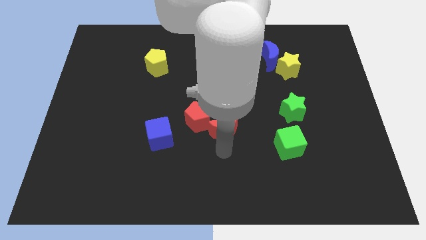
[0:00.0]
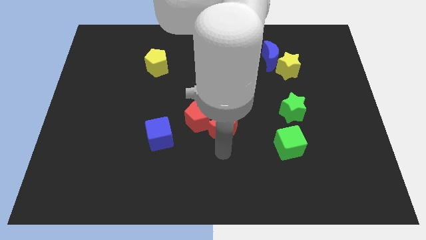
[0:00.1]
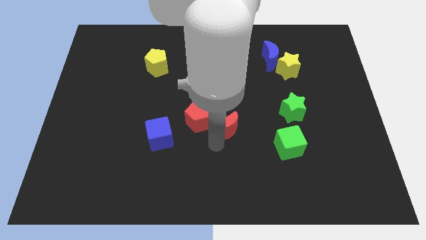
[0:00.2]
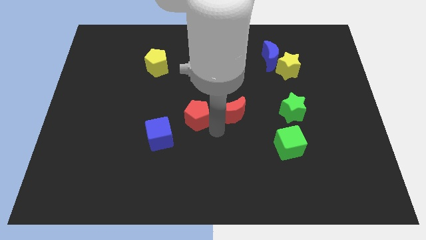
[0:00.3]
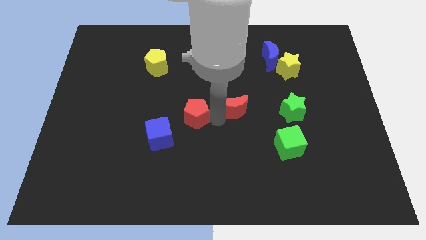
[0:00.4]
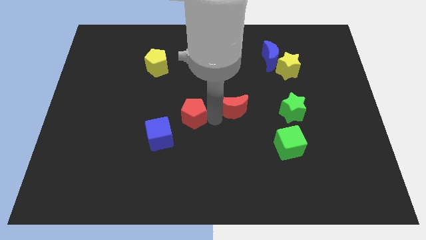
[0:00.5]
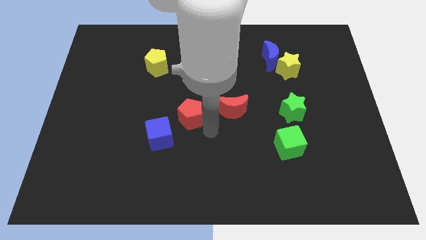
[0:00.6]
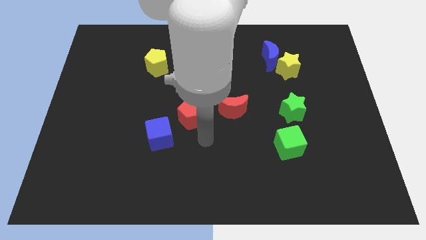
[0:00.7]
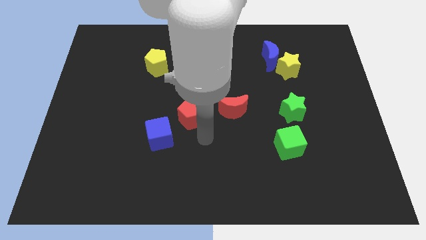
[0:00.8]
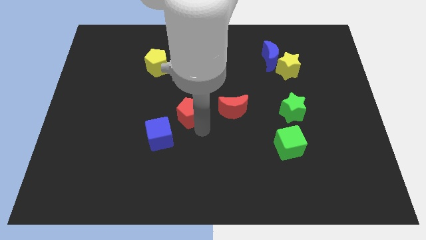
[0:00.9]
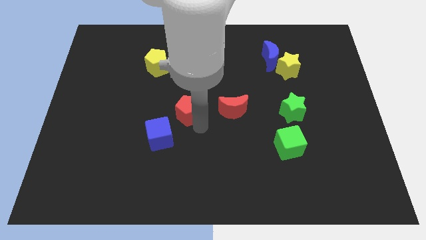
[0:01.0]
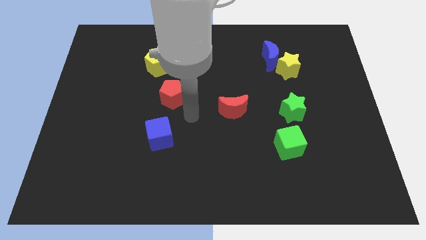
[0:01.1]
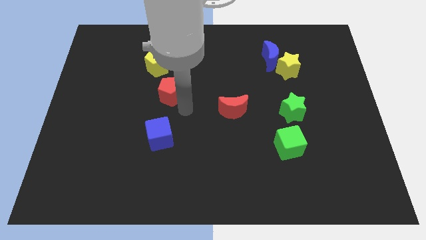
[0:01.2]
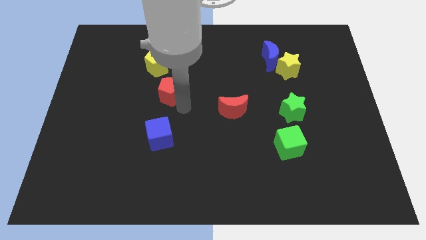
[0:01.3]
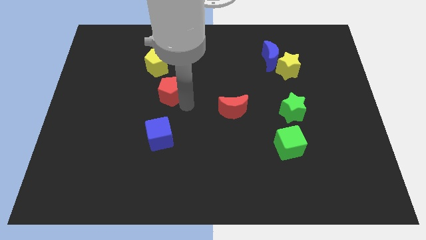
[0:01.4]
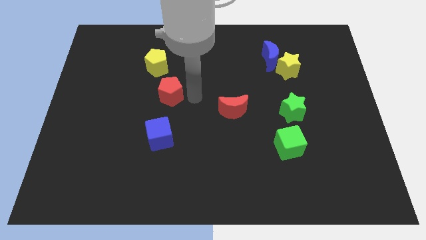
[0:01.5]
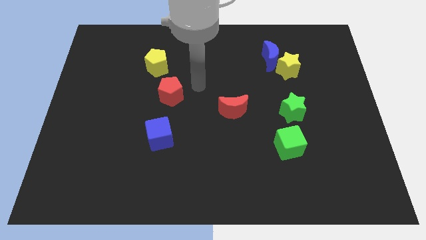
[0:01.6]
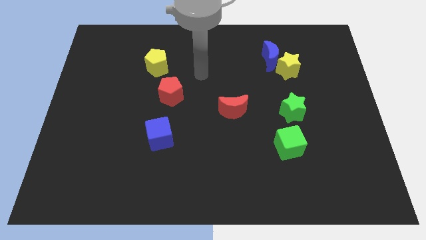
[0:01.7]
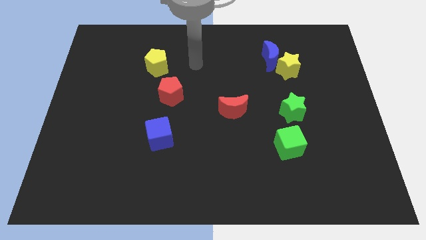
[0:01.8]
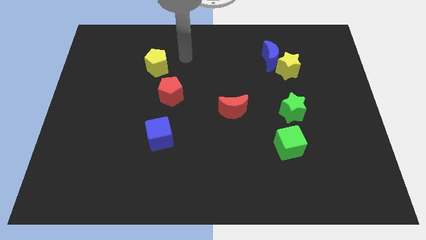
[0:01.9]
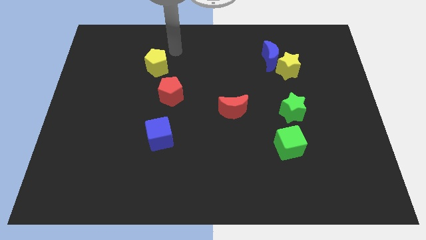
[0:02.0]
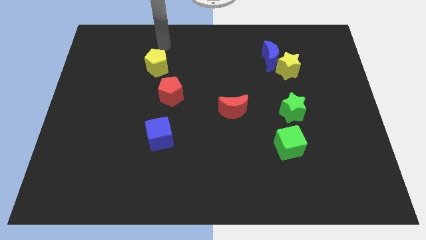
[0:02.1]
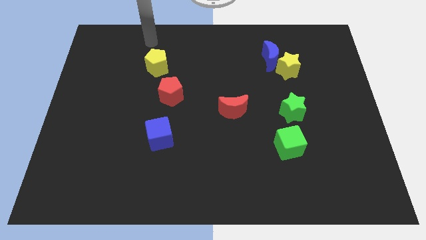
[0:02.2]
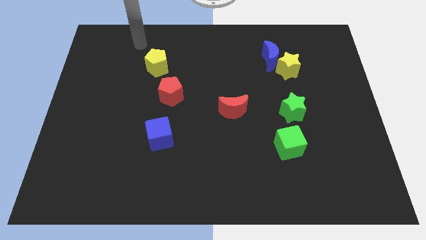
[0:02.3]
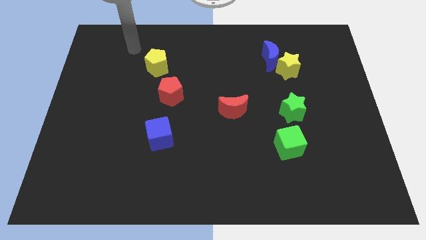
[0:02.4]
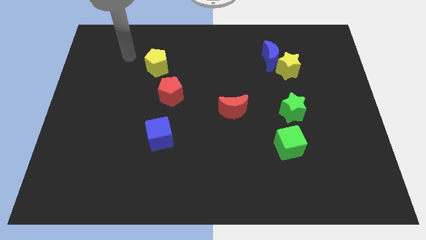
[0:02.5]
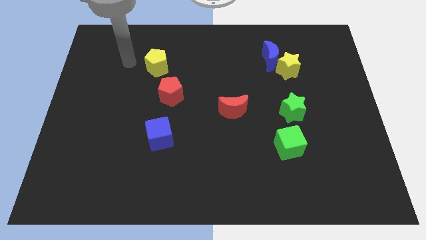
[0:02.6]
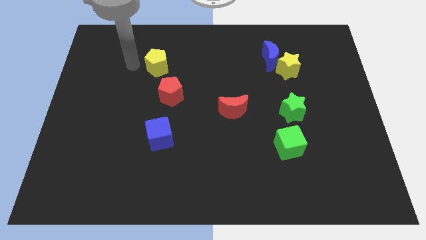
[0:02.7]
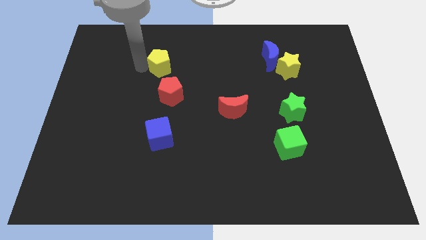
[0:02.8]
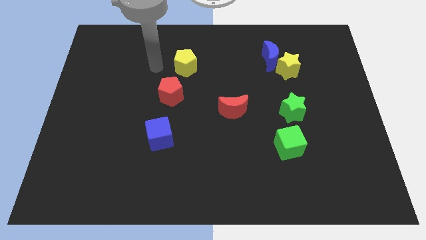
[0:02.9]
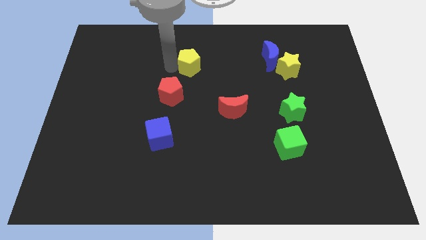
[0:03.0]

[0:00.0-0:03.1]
slightly push the yellow pentagon to the right side

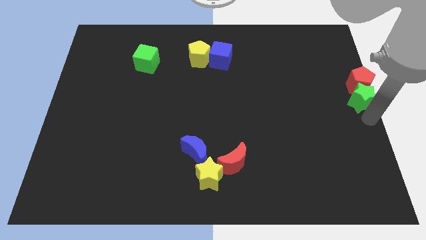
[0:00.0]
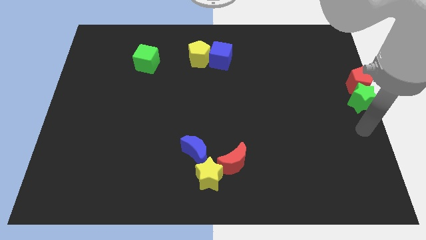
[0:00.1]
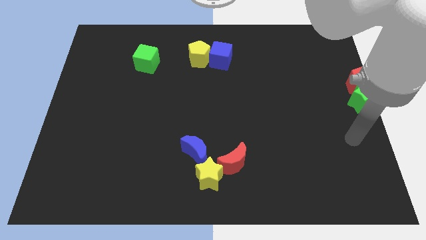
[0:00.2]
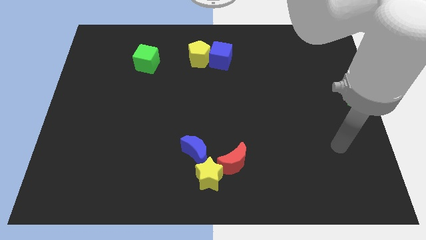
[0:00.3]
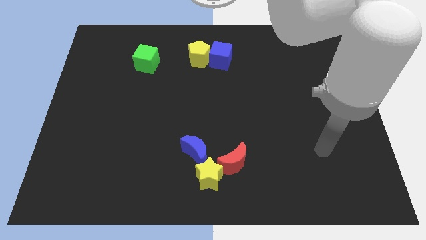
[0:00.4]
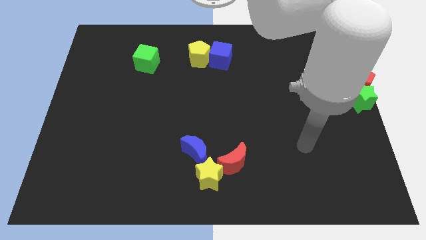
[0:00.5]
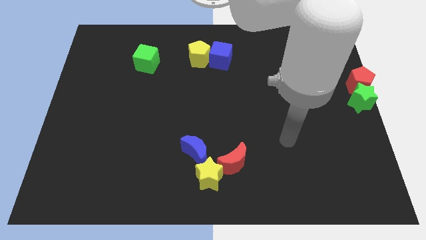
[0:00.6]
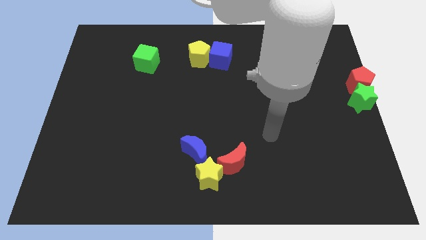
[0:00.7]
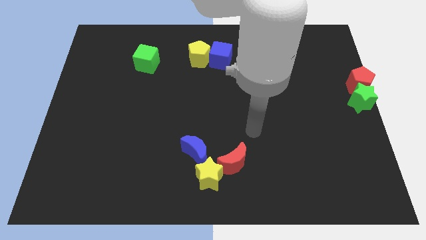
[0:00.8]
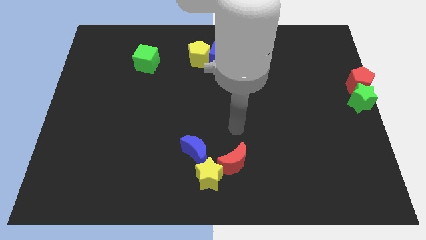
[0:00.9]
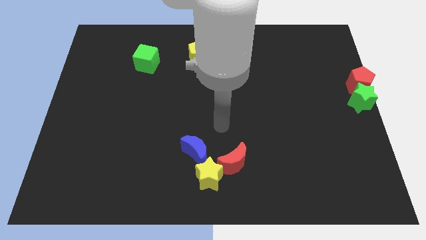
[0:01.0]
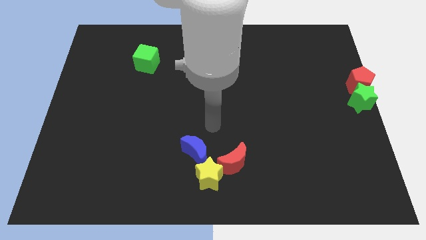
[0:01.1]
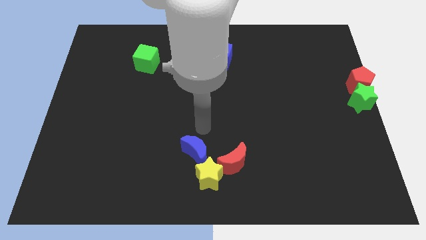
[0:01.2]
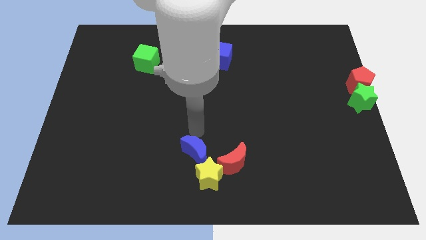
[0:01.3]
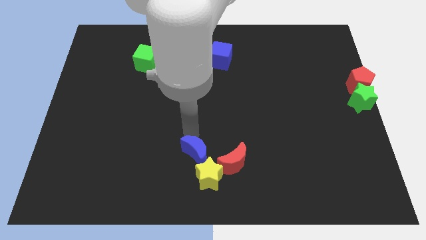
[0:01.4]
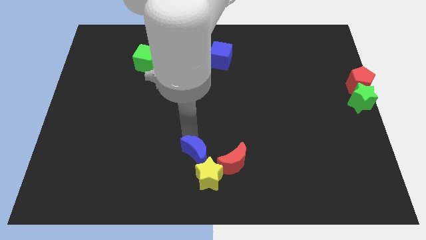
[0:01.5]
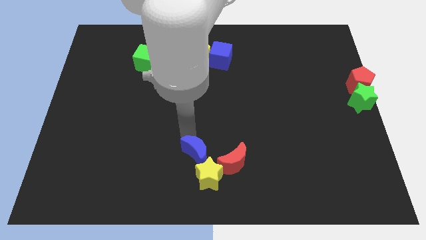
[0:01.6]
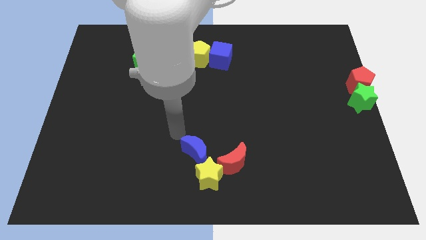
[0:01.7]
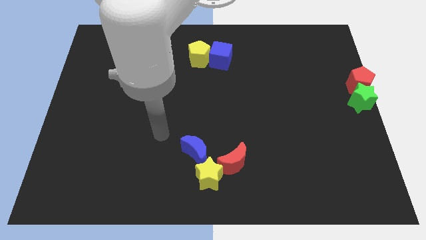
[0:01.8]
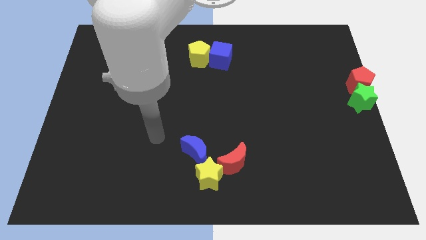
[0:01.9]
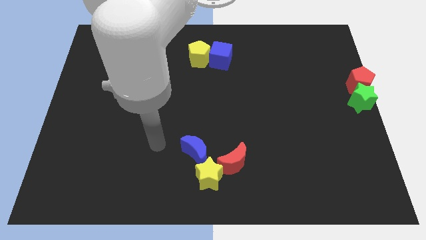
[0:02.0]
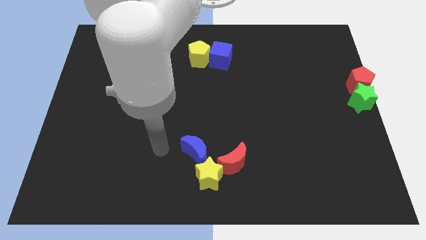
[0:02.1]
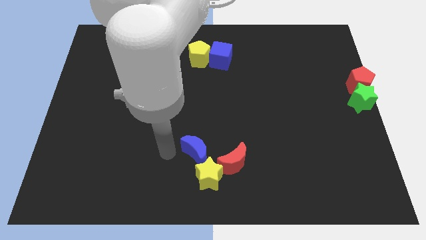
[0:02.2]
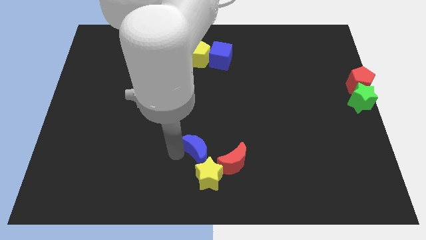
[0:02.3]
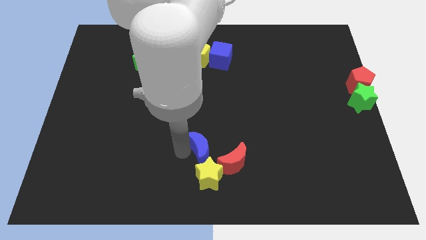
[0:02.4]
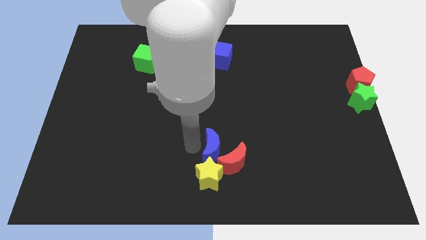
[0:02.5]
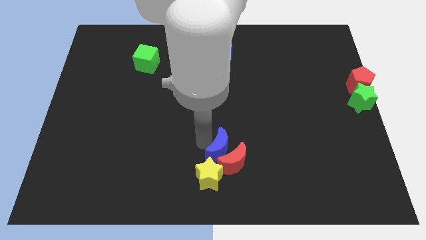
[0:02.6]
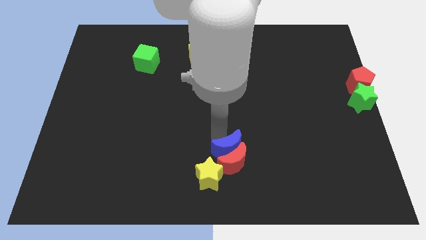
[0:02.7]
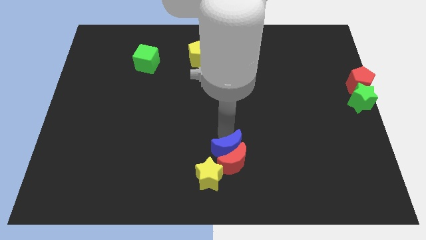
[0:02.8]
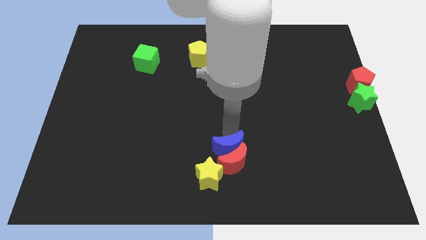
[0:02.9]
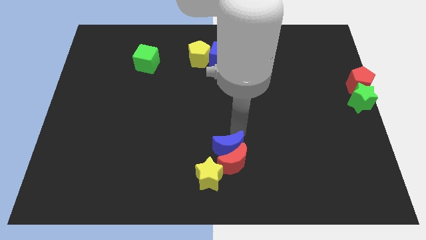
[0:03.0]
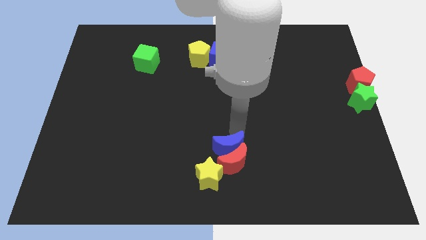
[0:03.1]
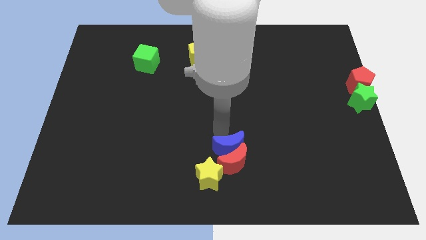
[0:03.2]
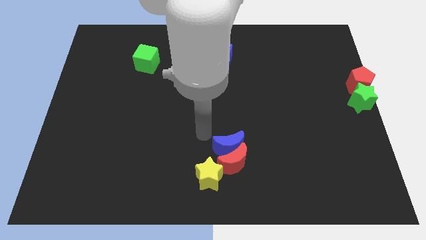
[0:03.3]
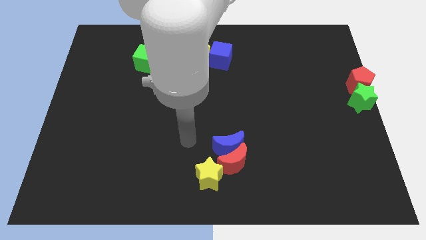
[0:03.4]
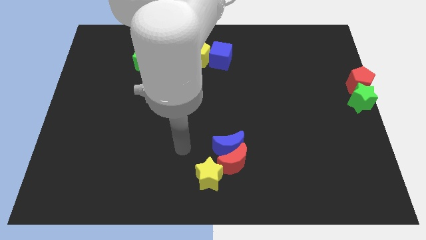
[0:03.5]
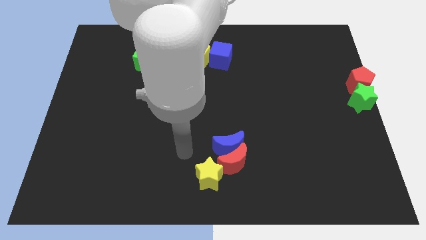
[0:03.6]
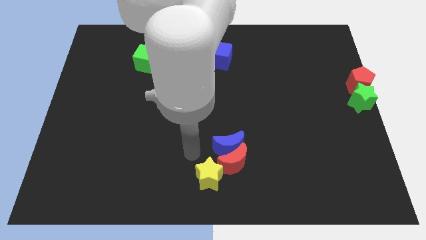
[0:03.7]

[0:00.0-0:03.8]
slide the blue crescent into the top side of the red crescent

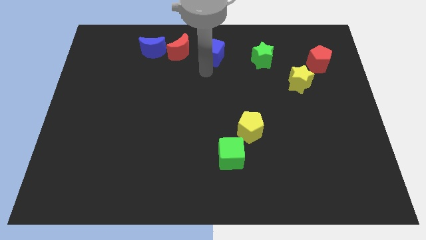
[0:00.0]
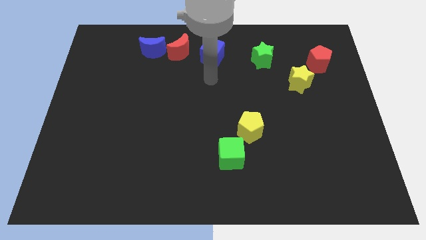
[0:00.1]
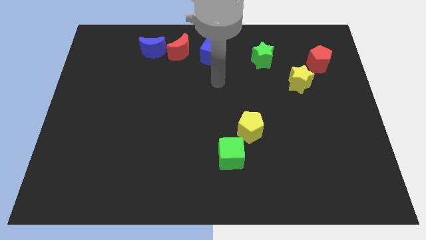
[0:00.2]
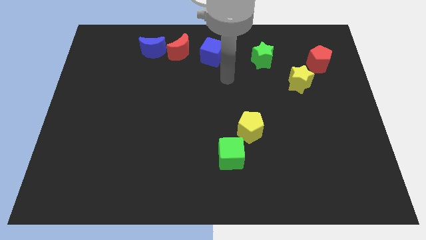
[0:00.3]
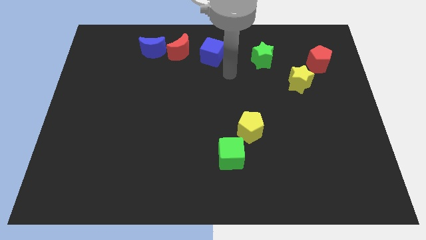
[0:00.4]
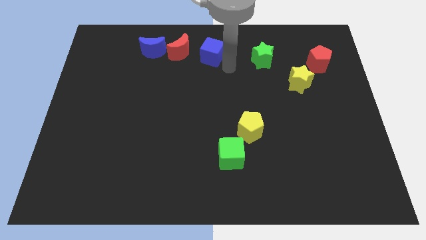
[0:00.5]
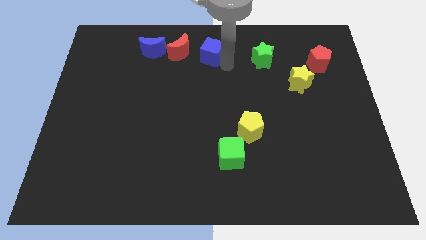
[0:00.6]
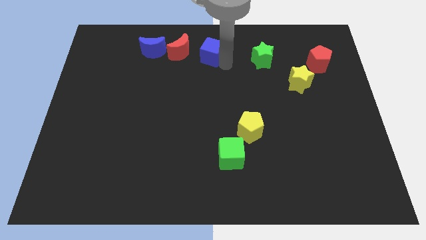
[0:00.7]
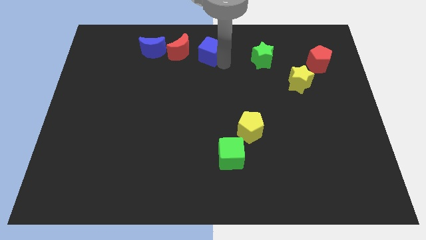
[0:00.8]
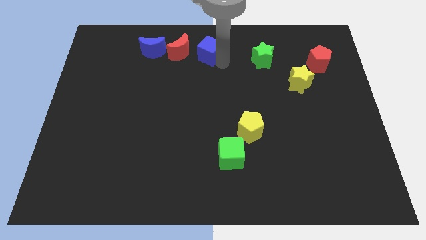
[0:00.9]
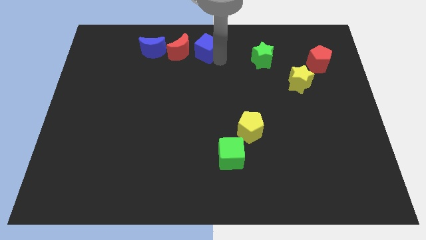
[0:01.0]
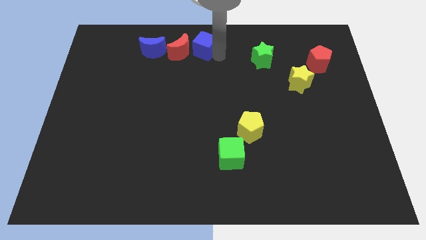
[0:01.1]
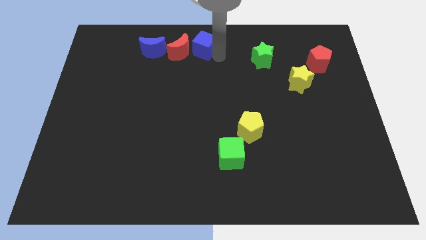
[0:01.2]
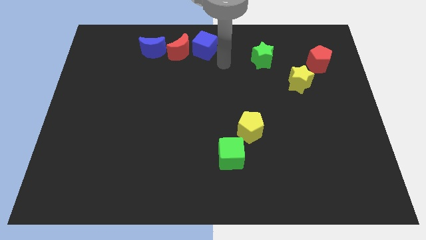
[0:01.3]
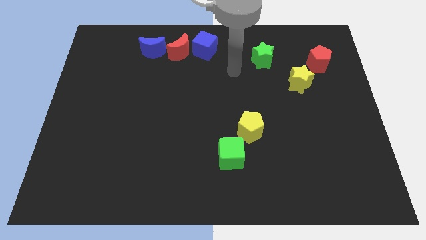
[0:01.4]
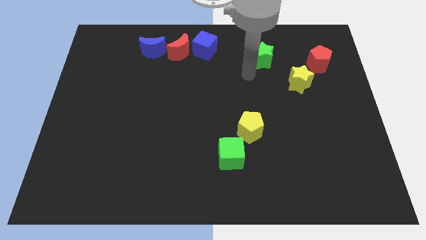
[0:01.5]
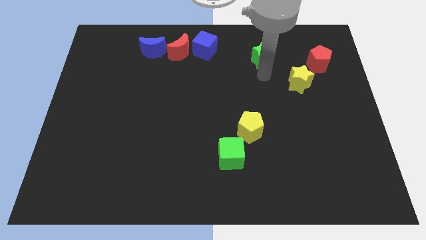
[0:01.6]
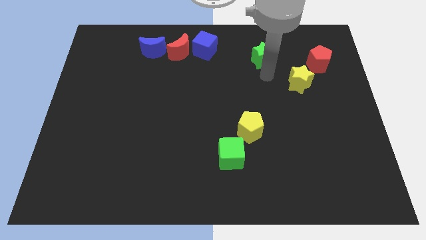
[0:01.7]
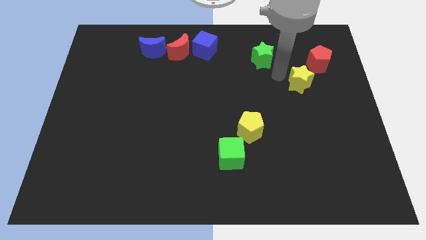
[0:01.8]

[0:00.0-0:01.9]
place the blue cube towards the right side of the red crescent

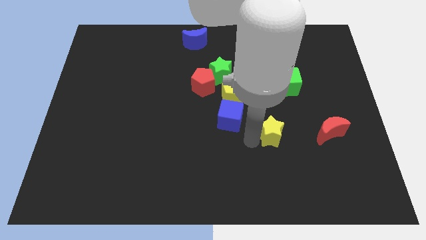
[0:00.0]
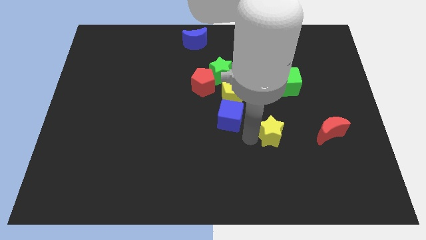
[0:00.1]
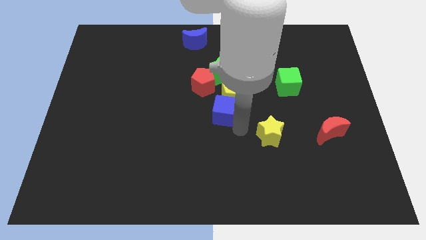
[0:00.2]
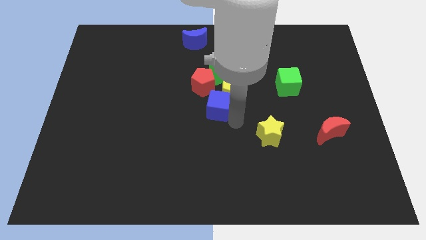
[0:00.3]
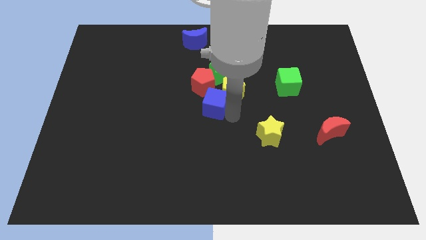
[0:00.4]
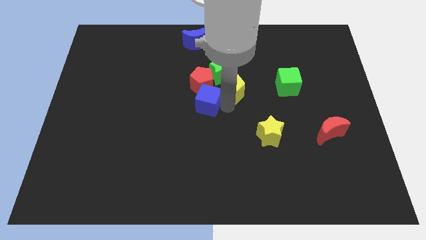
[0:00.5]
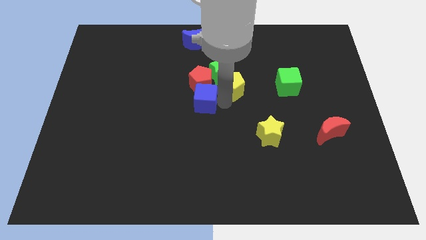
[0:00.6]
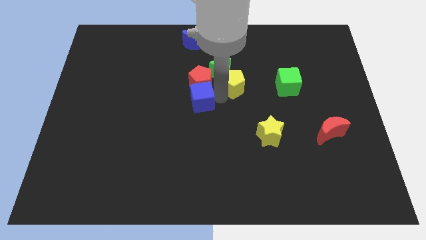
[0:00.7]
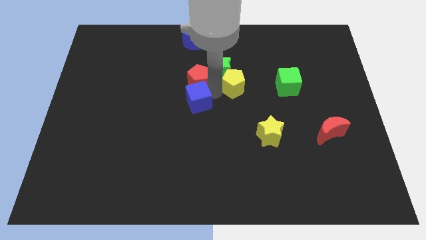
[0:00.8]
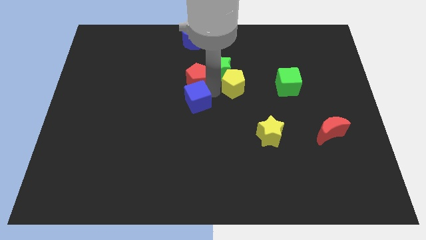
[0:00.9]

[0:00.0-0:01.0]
put your hand in between the blue cube and yellow pentagon
